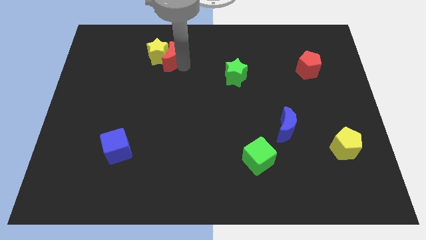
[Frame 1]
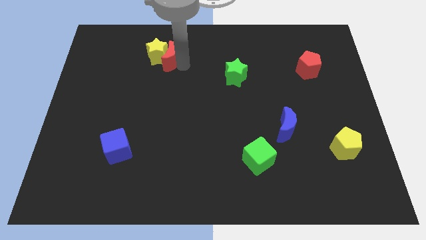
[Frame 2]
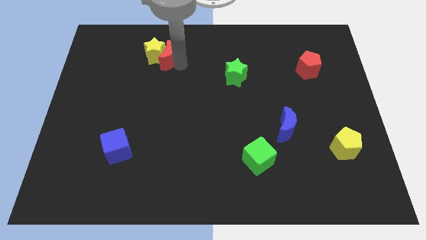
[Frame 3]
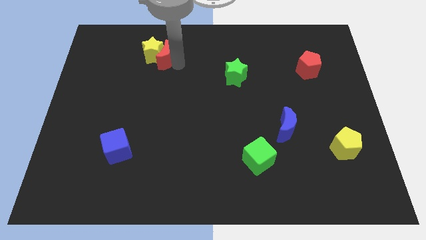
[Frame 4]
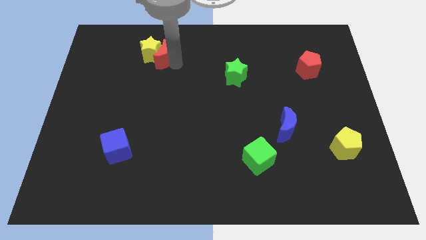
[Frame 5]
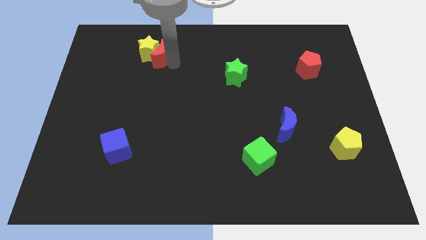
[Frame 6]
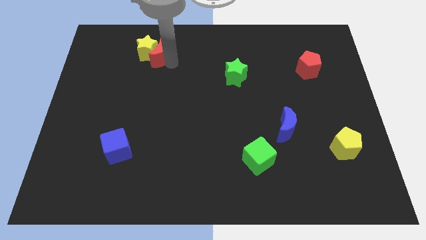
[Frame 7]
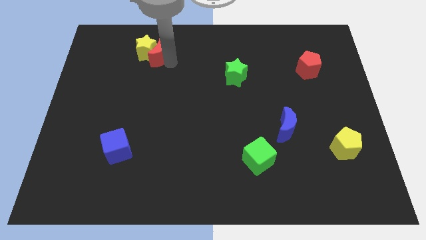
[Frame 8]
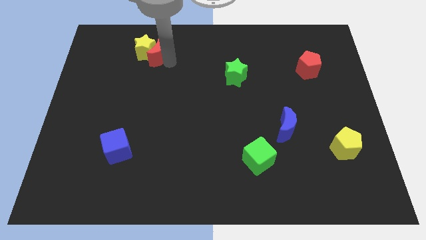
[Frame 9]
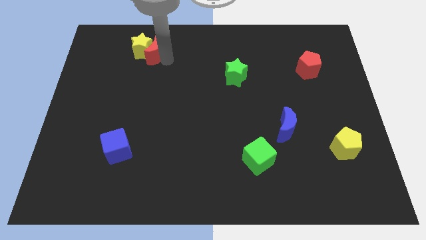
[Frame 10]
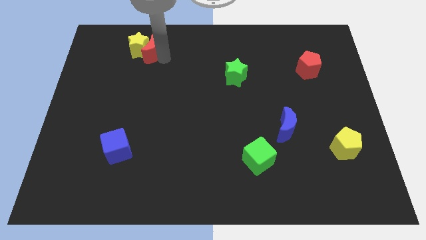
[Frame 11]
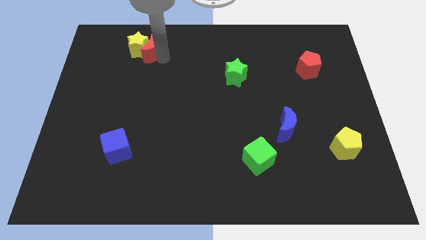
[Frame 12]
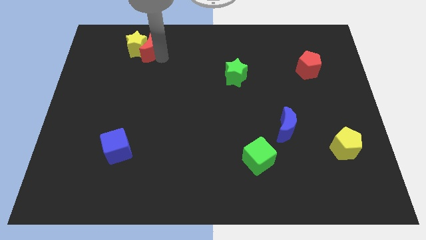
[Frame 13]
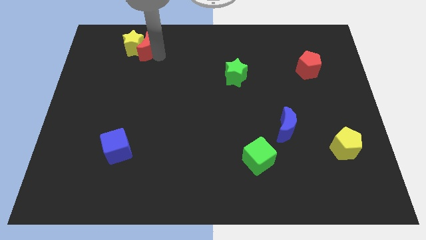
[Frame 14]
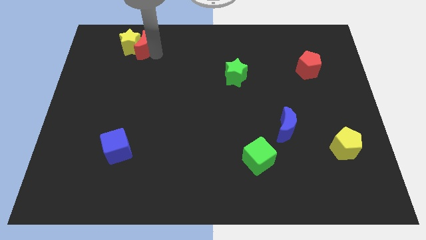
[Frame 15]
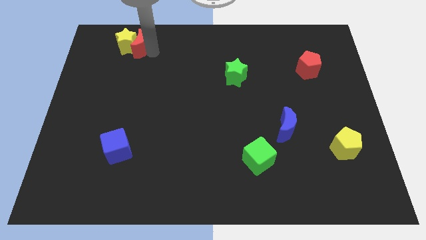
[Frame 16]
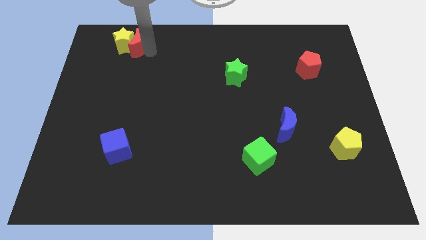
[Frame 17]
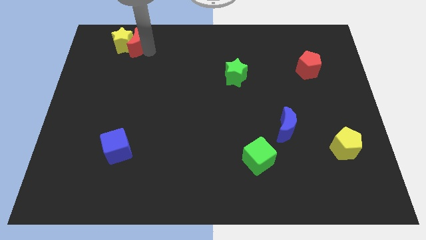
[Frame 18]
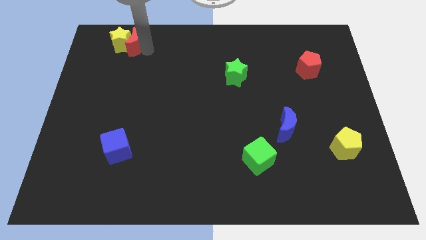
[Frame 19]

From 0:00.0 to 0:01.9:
move yellow star with red crescent towards top left corner

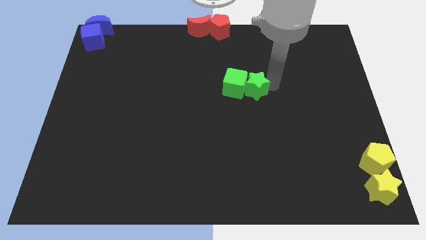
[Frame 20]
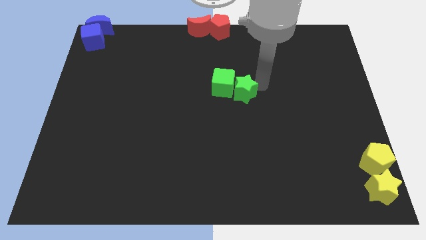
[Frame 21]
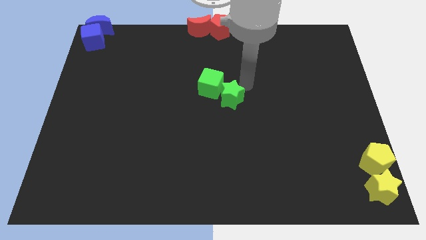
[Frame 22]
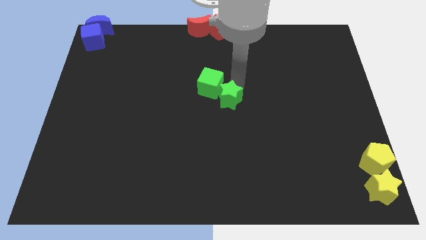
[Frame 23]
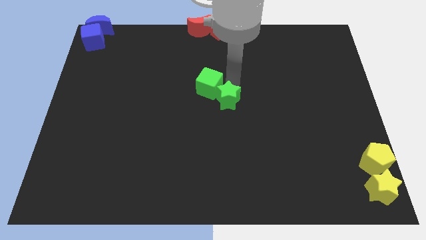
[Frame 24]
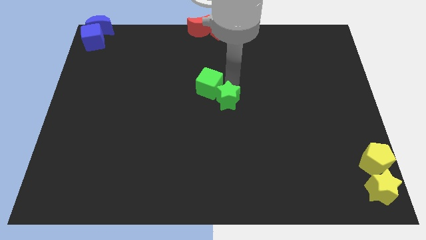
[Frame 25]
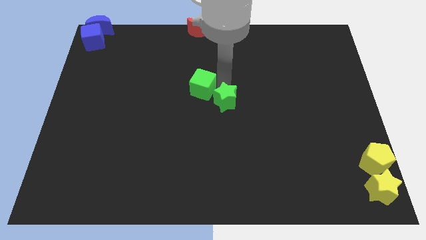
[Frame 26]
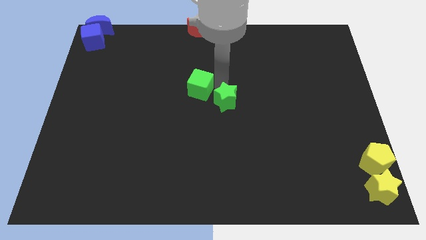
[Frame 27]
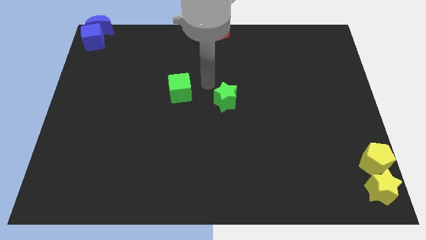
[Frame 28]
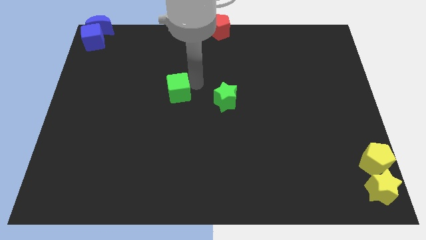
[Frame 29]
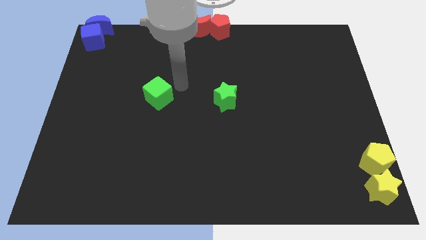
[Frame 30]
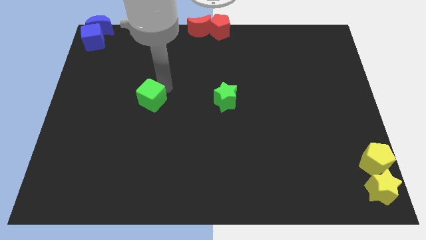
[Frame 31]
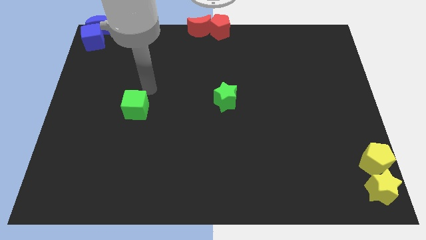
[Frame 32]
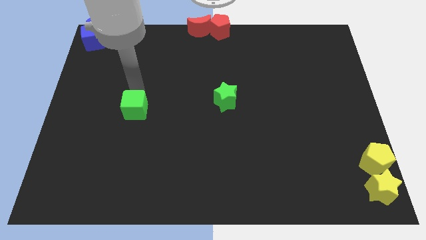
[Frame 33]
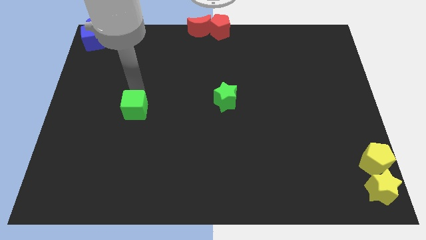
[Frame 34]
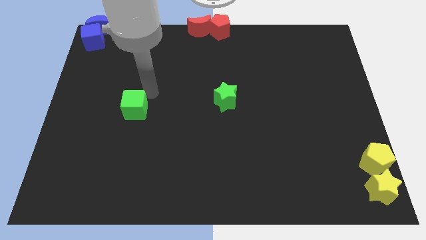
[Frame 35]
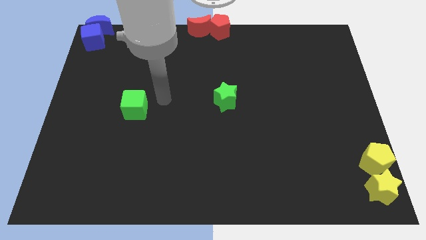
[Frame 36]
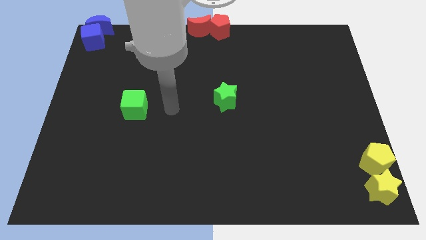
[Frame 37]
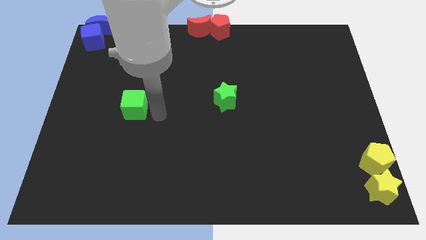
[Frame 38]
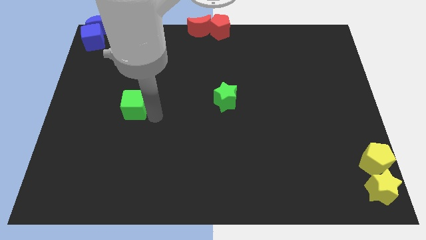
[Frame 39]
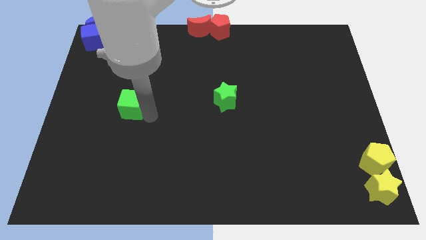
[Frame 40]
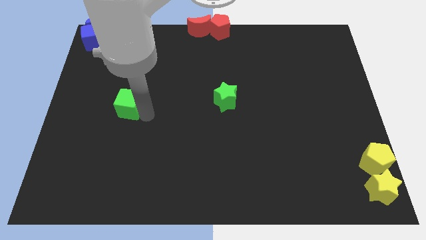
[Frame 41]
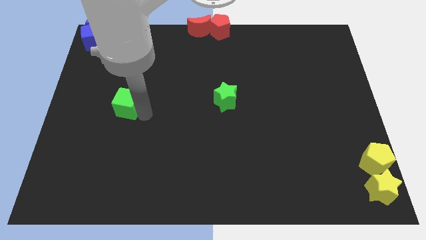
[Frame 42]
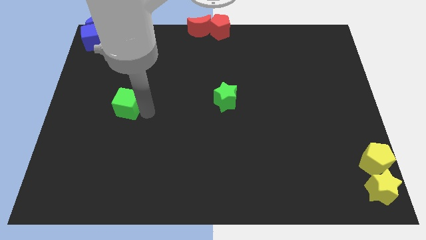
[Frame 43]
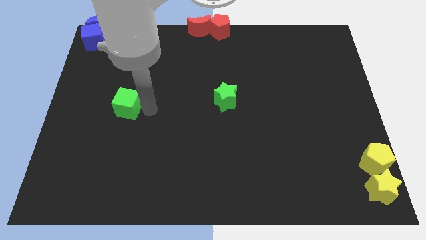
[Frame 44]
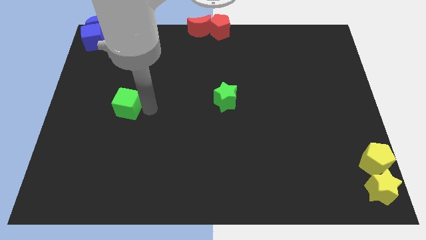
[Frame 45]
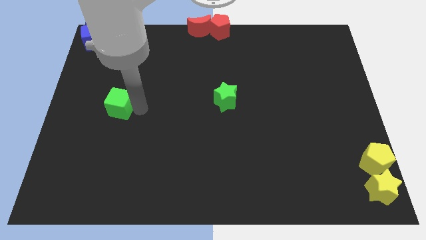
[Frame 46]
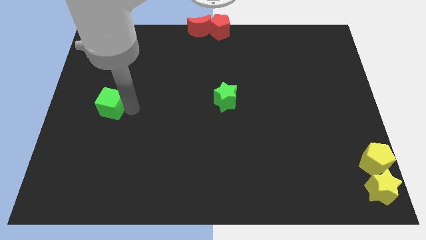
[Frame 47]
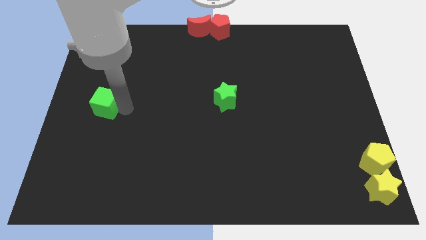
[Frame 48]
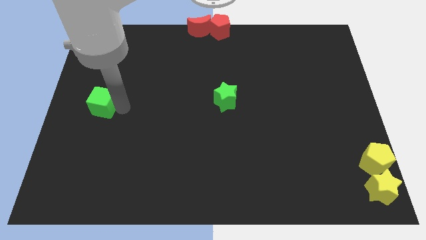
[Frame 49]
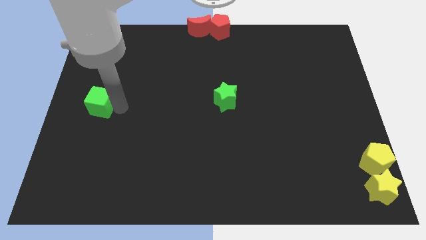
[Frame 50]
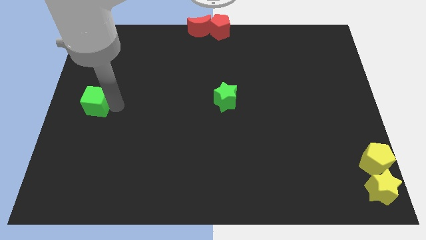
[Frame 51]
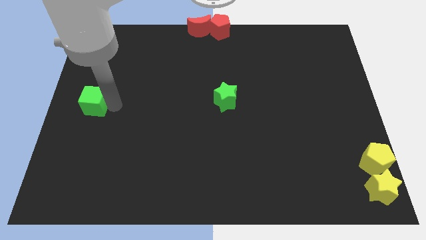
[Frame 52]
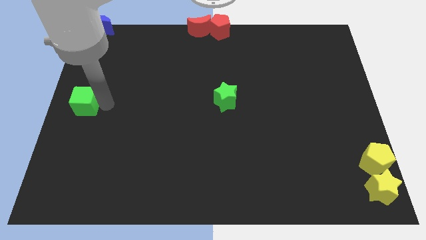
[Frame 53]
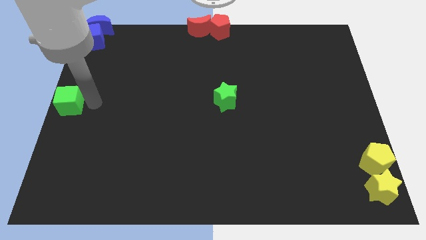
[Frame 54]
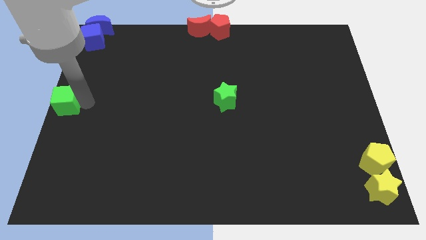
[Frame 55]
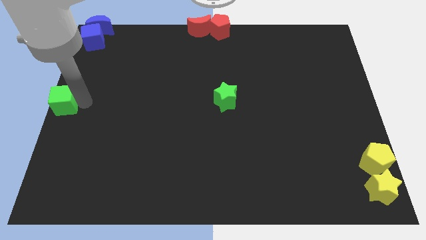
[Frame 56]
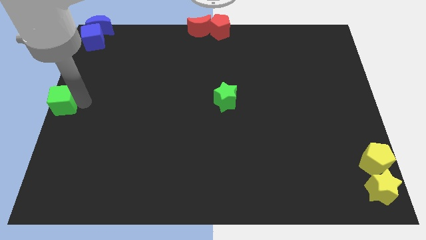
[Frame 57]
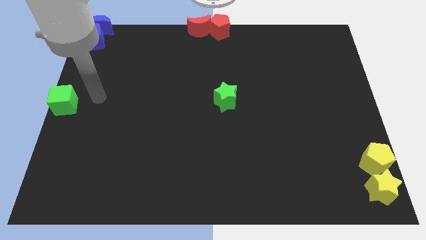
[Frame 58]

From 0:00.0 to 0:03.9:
push the green cube towards the center left of the board

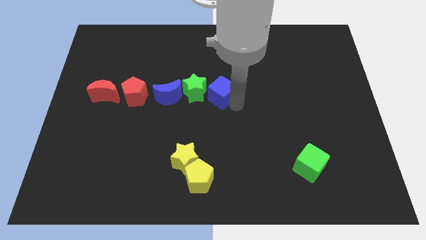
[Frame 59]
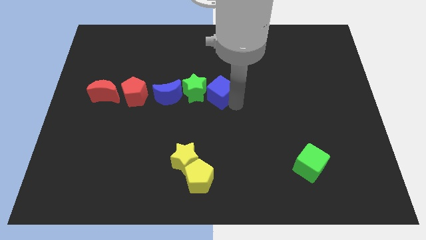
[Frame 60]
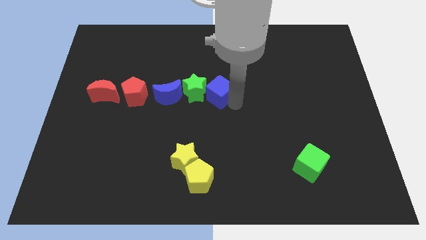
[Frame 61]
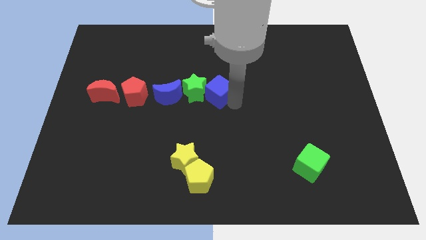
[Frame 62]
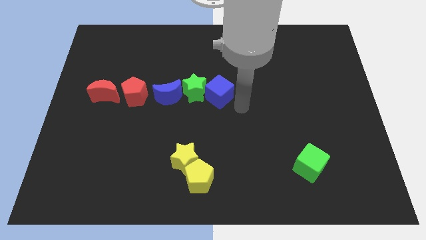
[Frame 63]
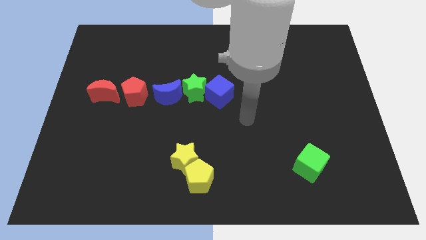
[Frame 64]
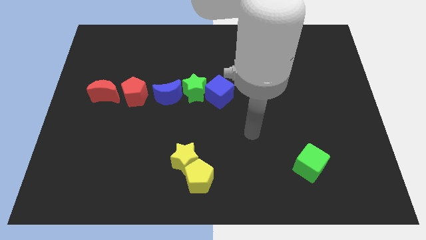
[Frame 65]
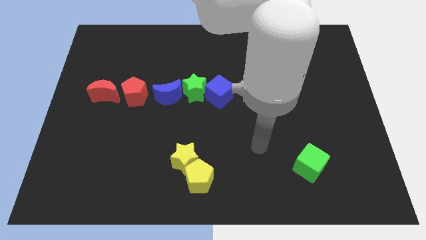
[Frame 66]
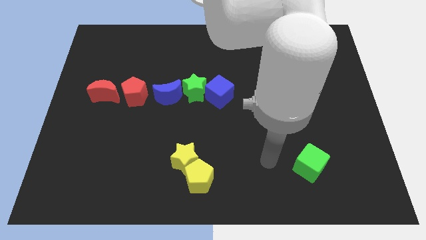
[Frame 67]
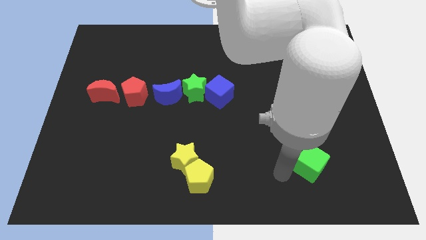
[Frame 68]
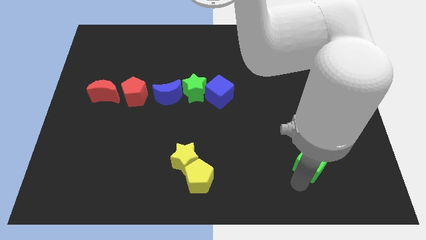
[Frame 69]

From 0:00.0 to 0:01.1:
move your arm away from the blue cube

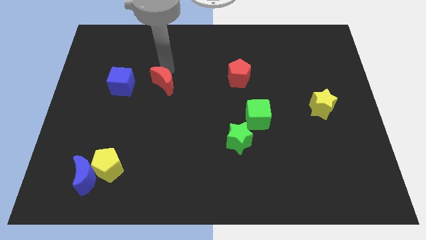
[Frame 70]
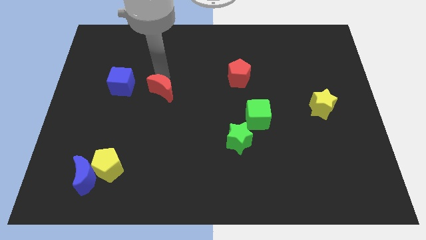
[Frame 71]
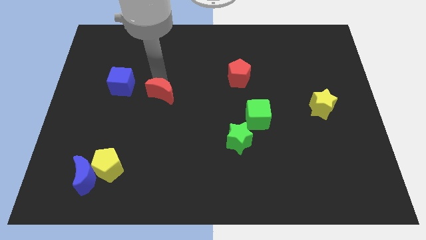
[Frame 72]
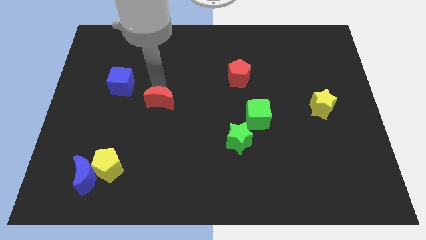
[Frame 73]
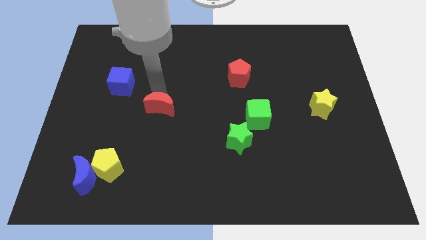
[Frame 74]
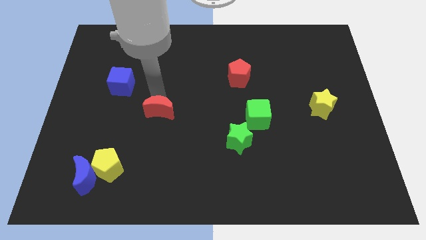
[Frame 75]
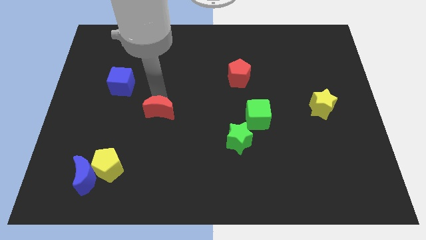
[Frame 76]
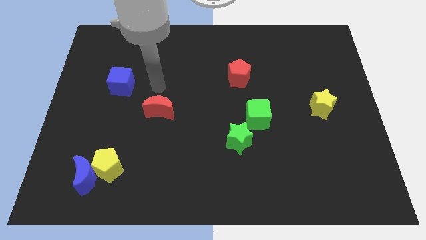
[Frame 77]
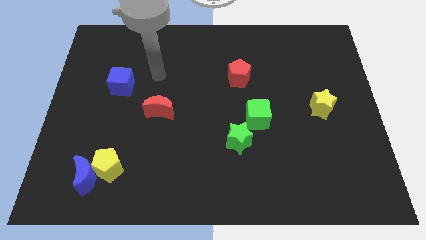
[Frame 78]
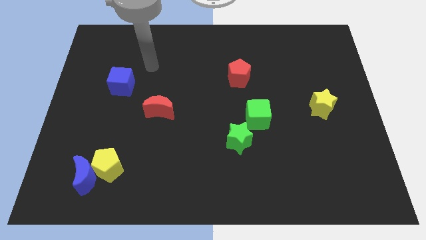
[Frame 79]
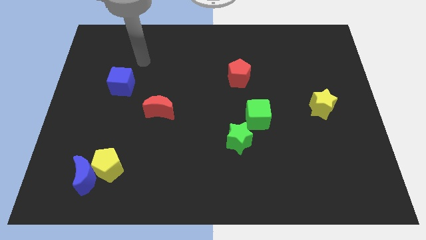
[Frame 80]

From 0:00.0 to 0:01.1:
slide red moon down parallel to green cube

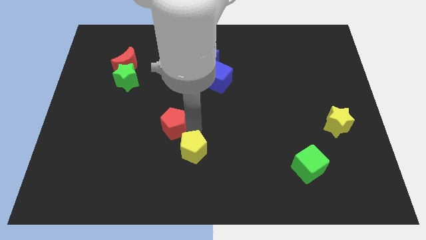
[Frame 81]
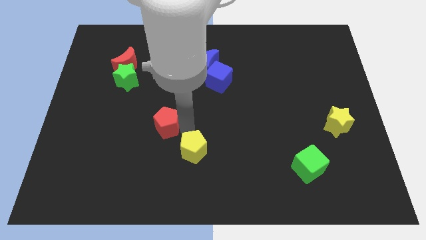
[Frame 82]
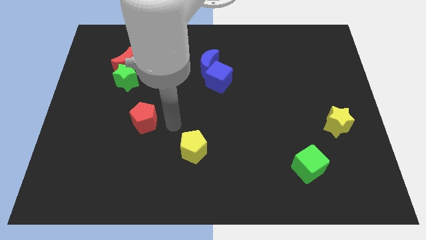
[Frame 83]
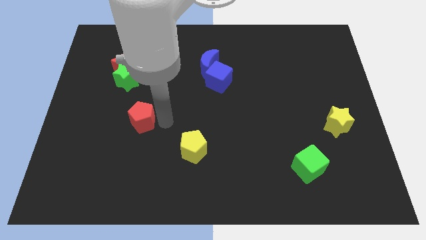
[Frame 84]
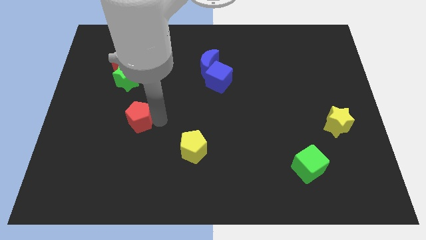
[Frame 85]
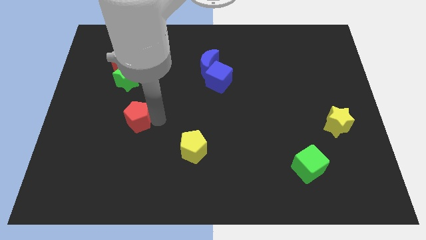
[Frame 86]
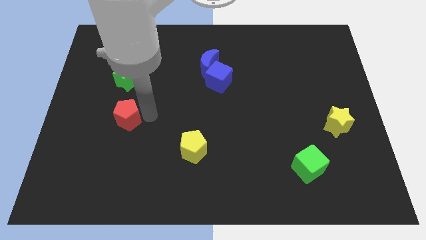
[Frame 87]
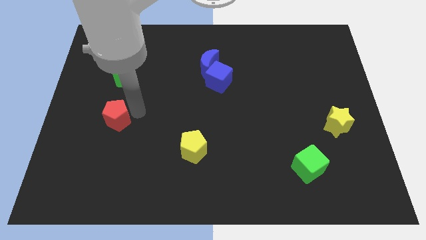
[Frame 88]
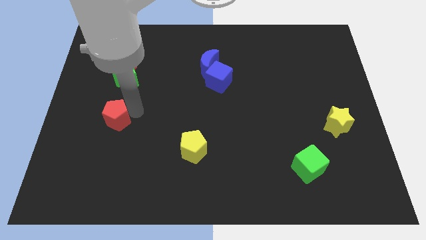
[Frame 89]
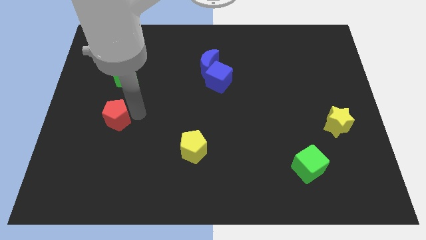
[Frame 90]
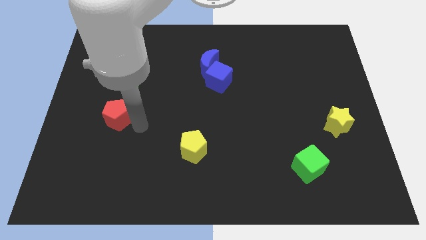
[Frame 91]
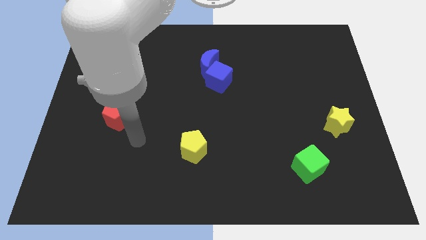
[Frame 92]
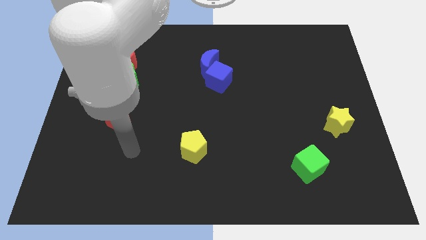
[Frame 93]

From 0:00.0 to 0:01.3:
push the red pentagon parallel to the bottom of the green star
